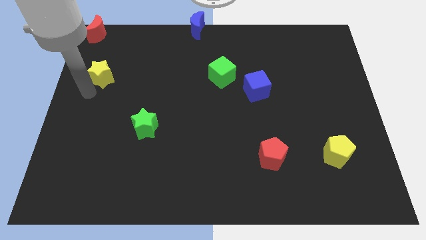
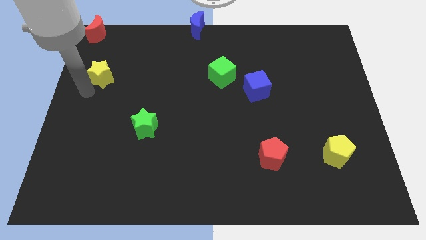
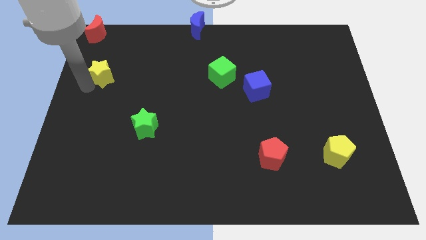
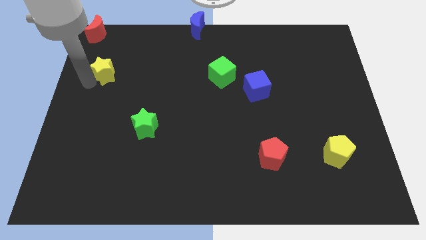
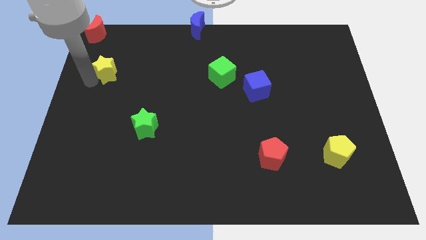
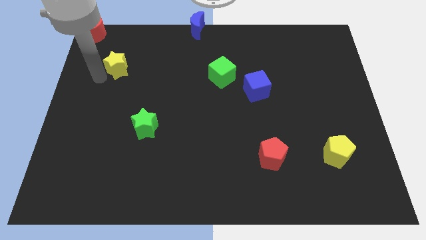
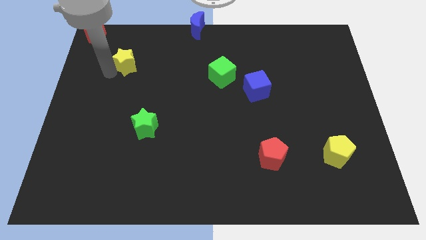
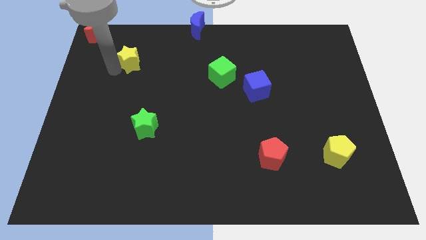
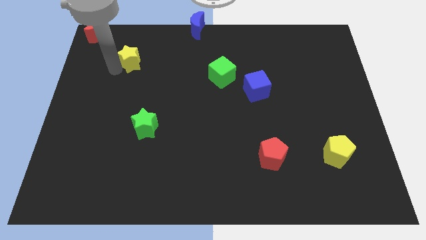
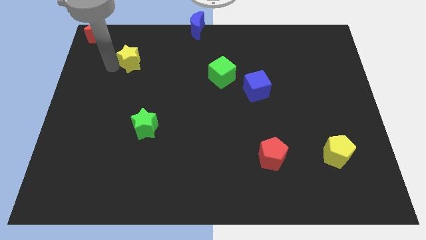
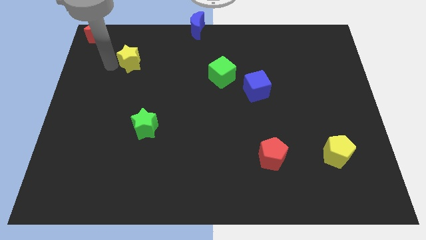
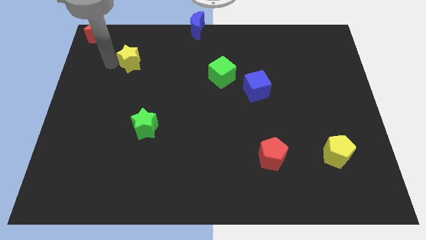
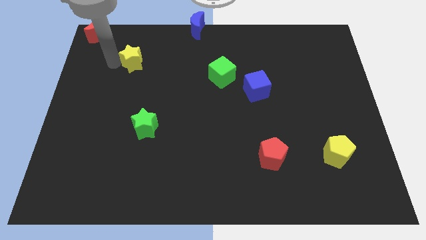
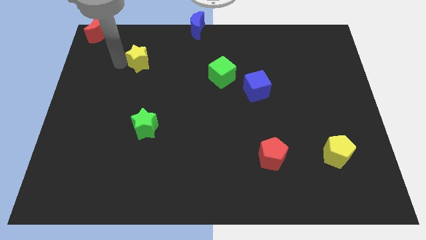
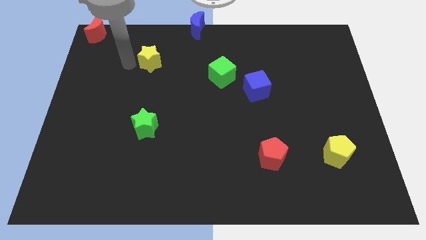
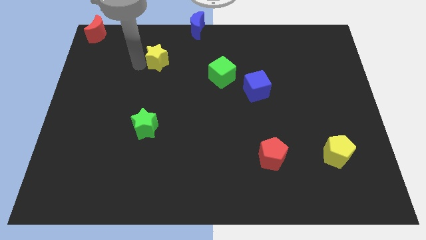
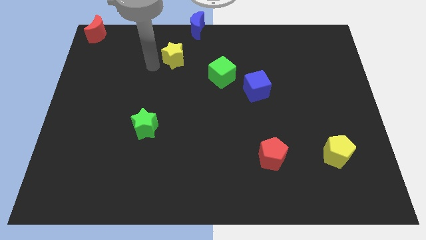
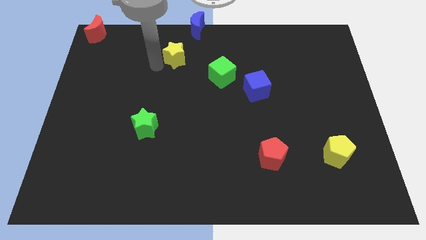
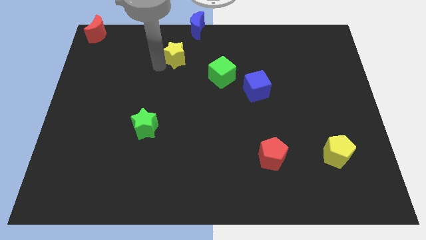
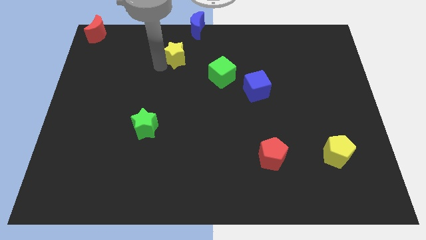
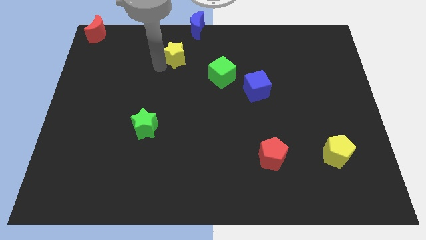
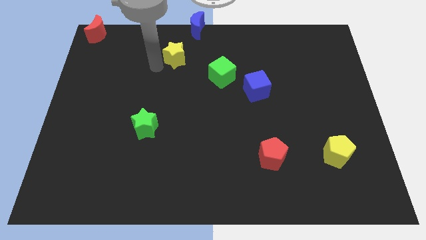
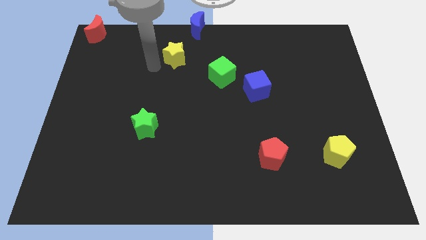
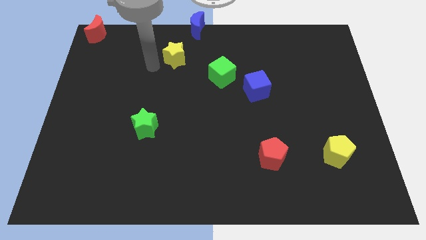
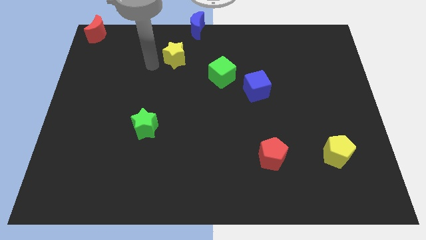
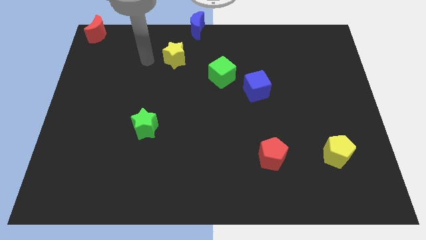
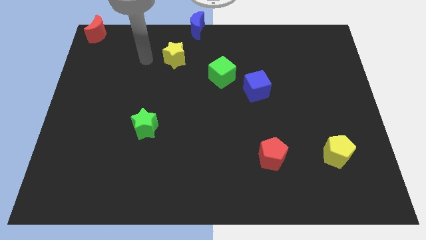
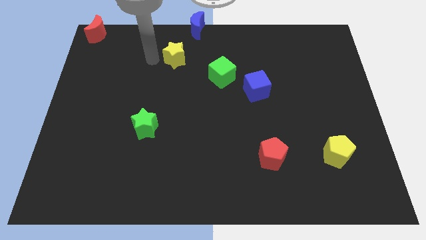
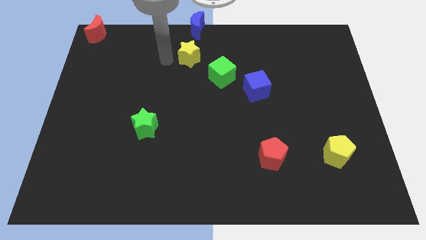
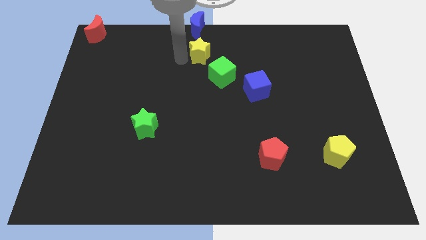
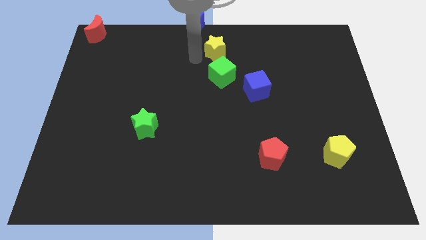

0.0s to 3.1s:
place yellow star below blue moon

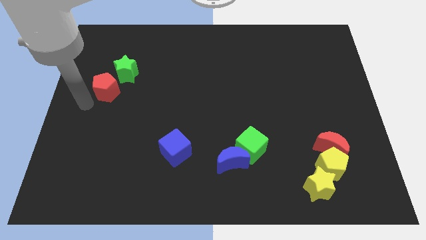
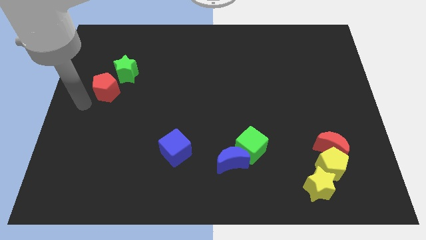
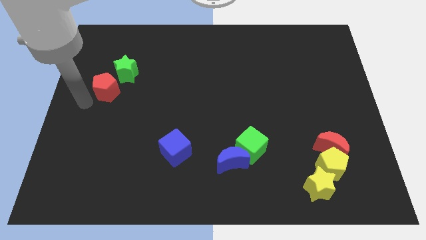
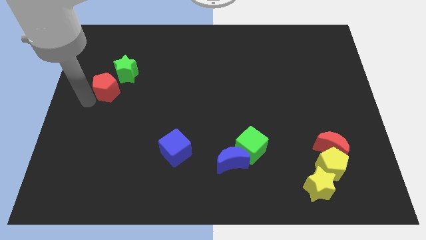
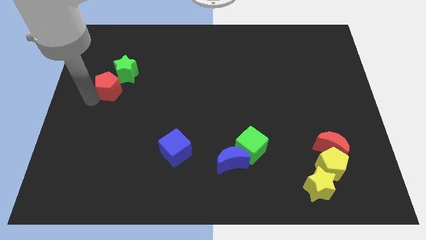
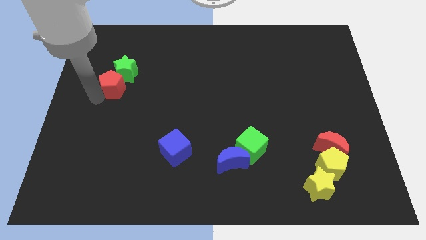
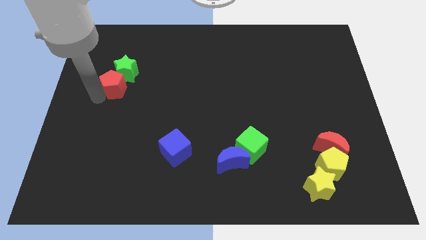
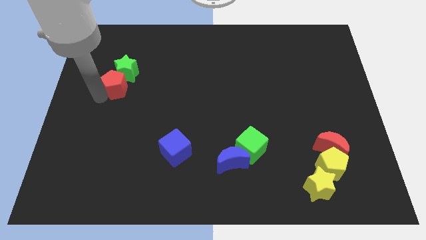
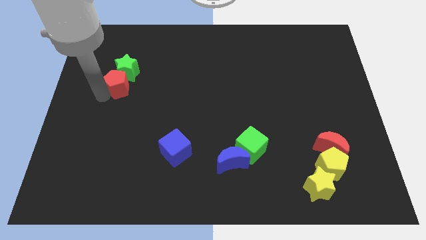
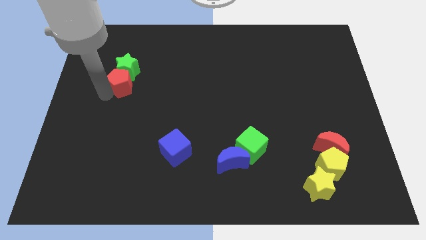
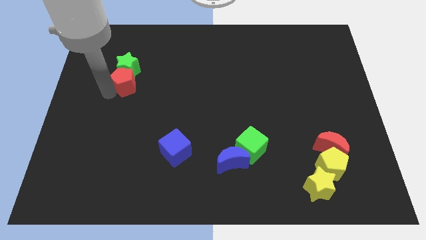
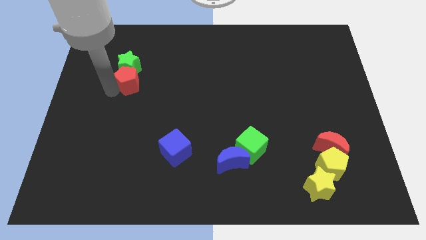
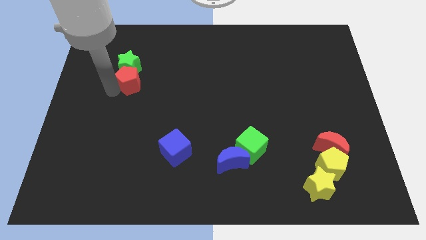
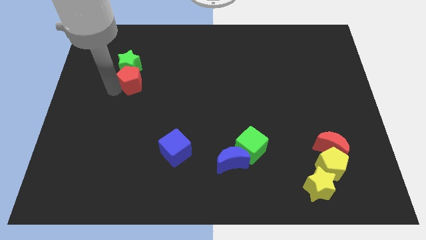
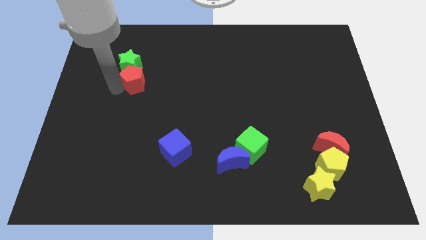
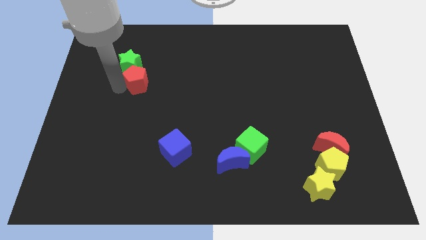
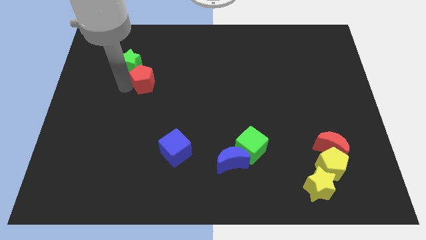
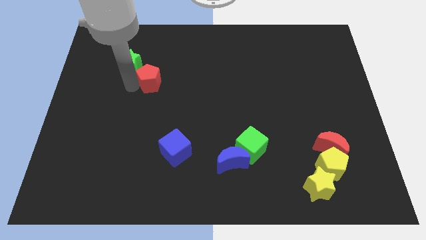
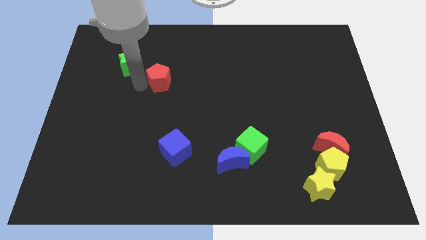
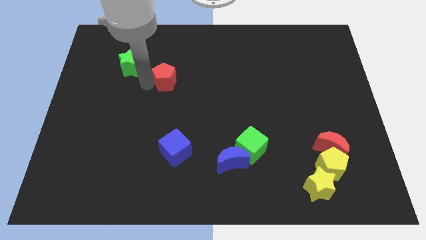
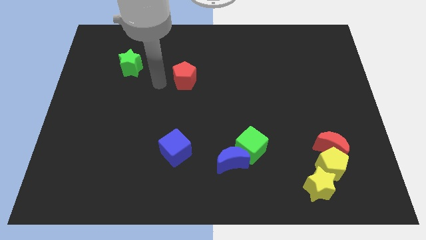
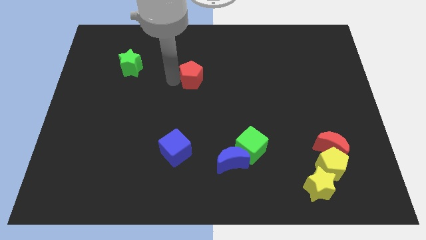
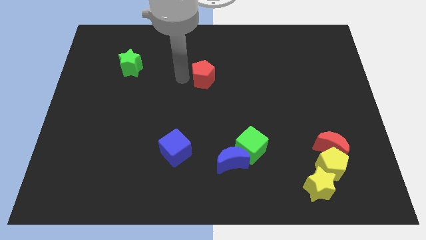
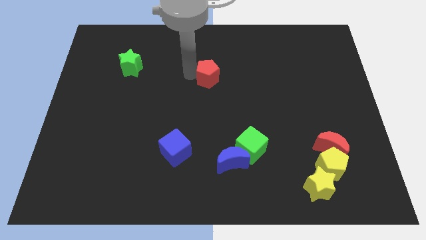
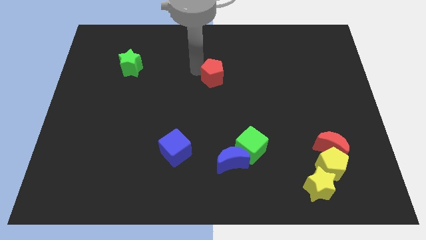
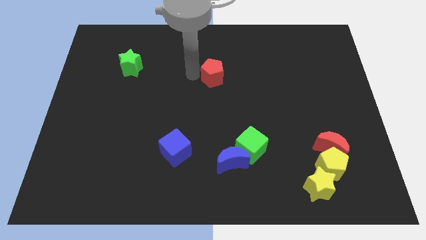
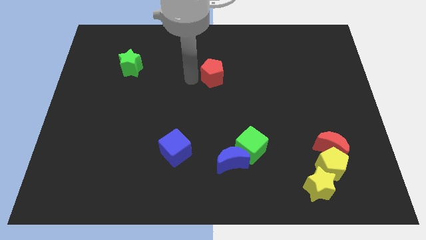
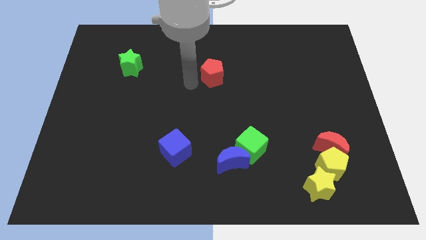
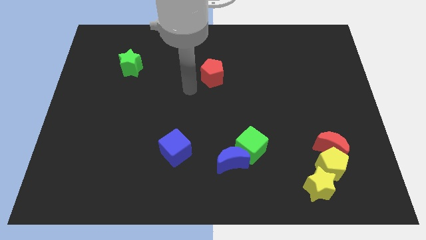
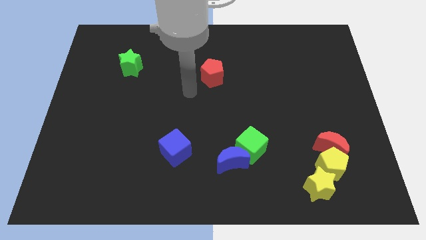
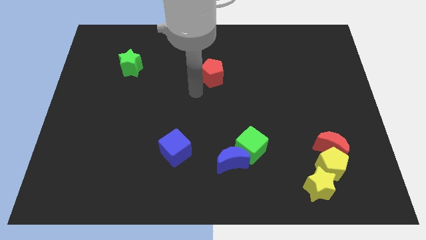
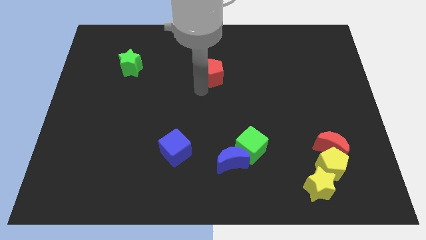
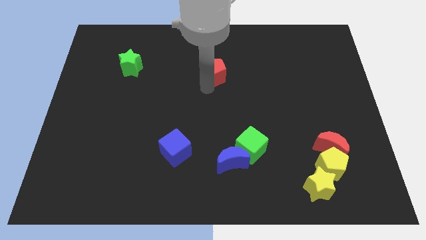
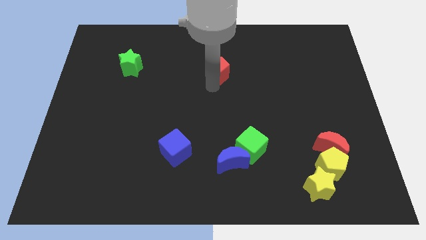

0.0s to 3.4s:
push the red pentagon to the right side of the green star

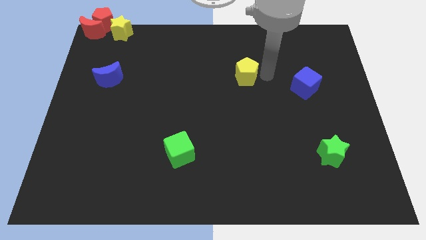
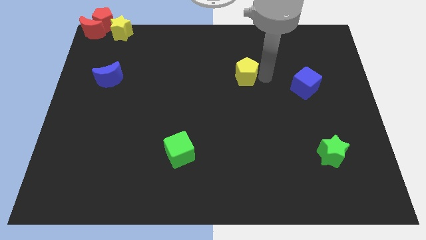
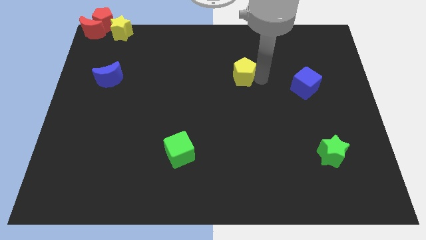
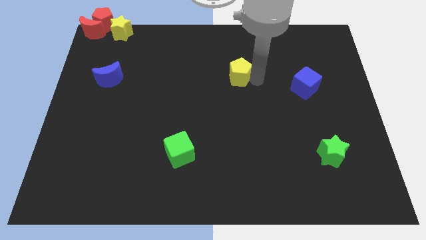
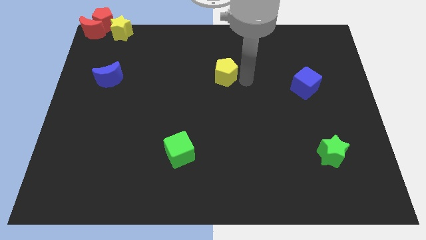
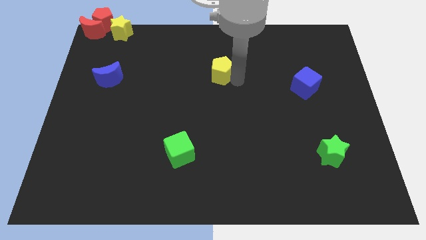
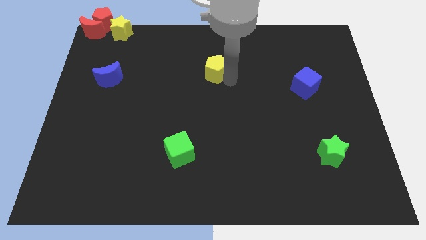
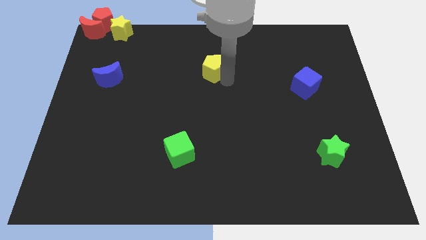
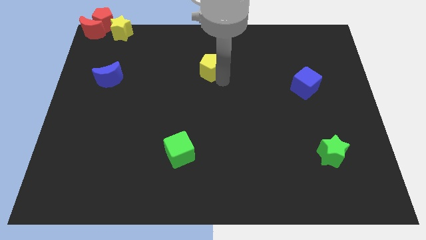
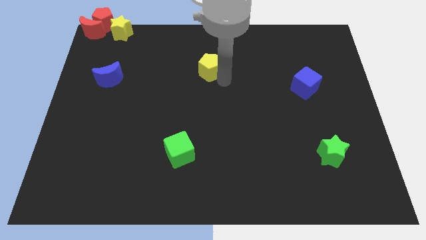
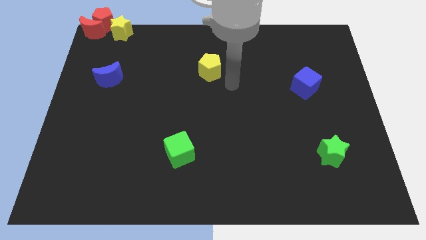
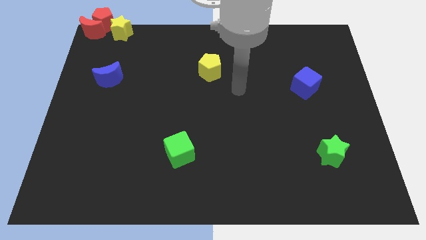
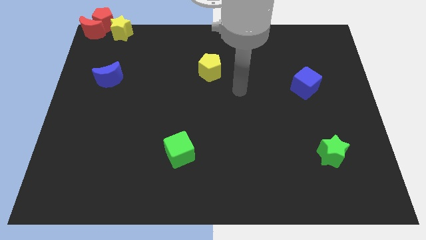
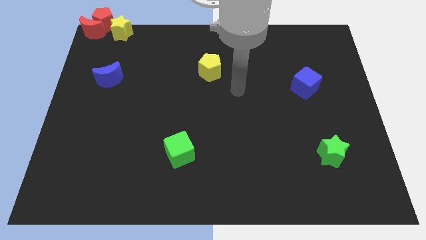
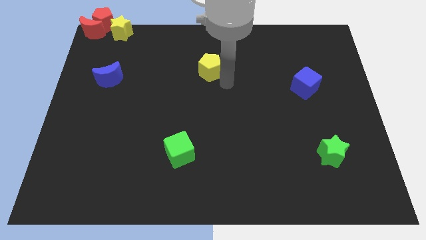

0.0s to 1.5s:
move the yellow pentagon to the center

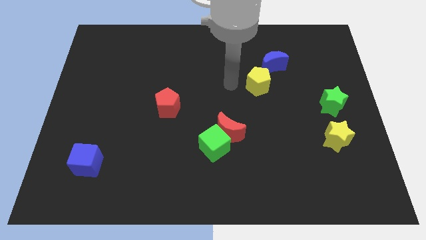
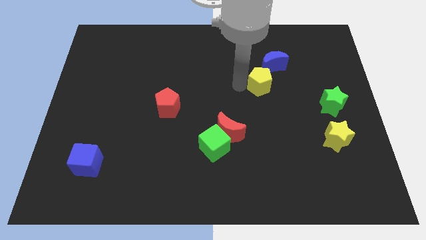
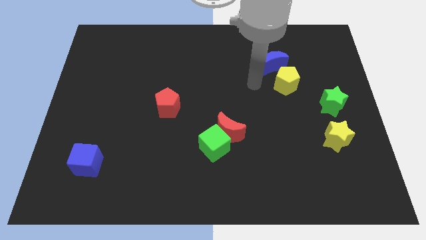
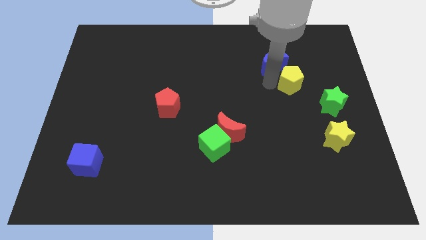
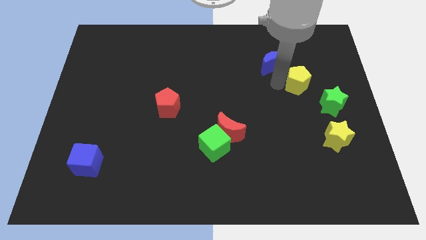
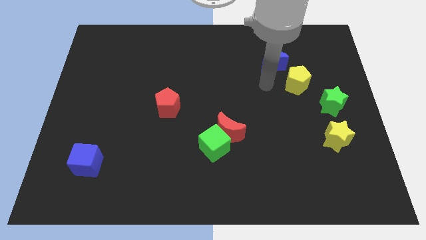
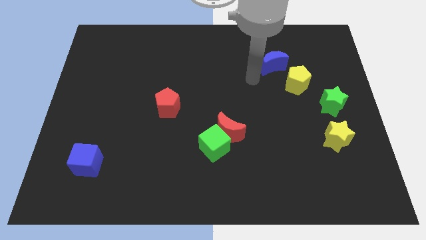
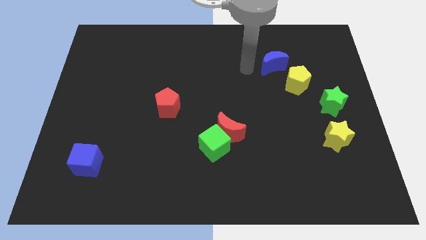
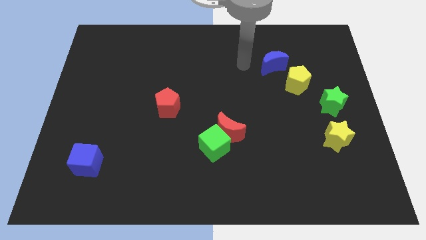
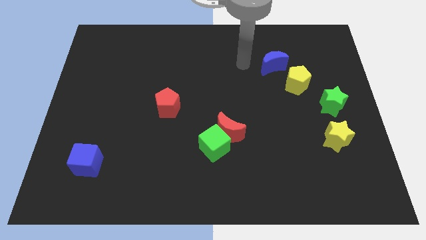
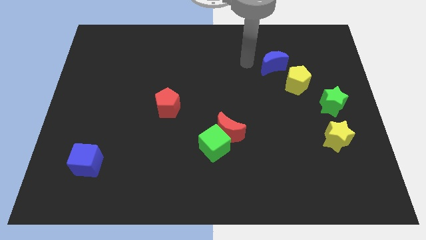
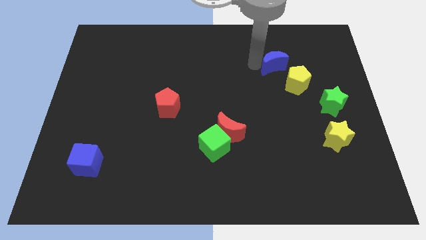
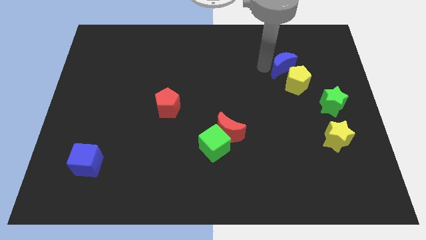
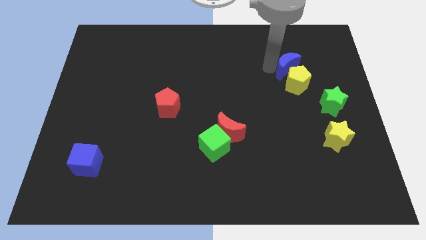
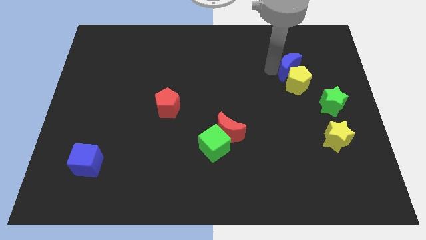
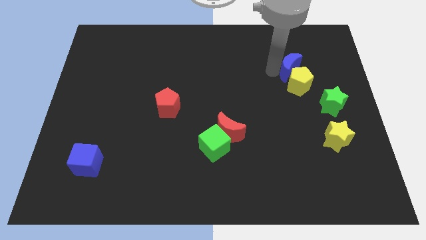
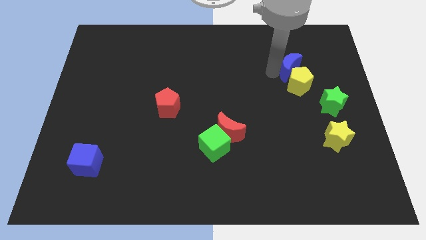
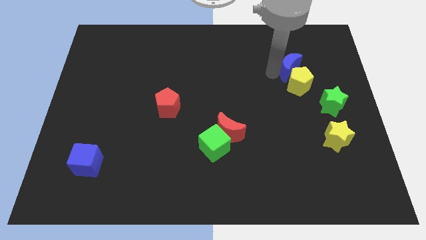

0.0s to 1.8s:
slide the blue moon into the yellow pentagon
